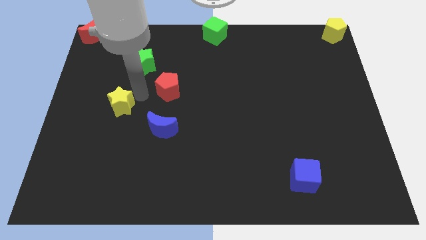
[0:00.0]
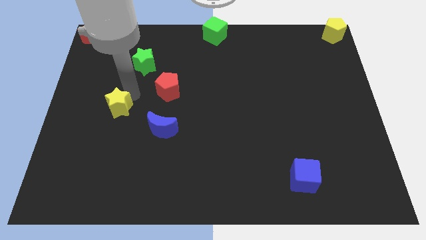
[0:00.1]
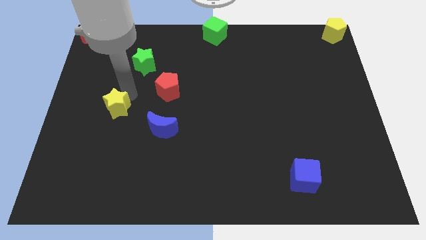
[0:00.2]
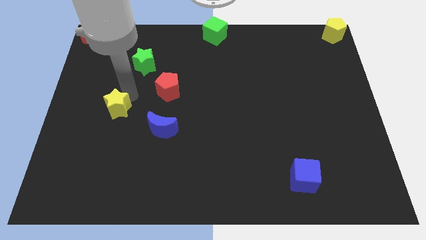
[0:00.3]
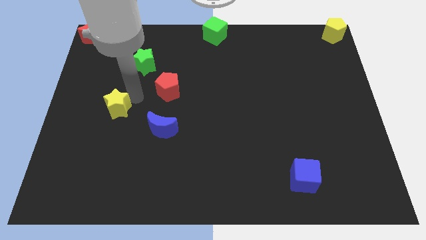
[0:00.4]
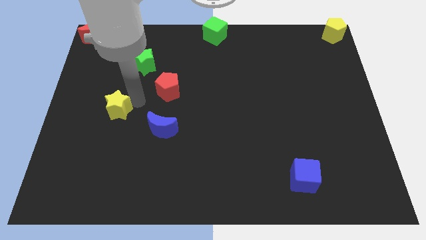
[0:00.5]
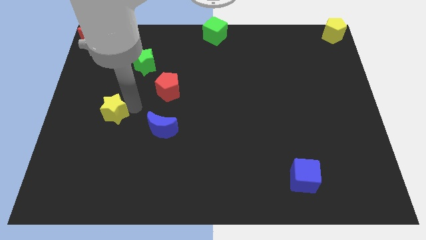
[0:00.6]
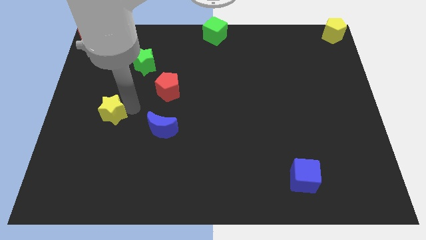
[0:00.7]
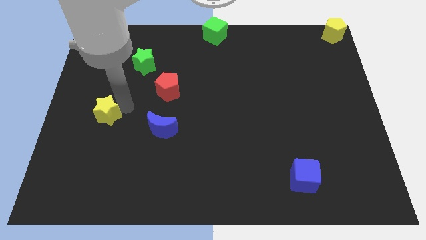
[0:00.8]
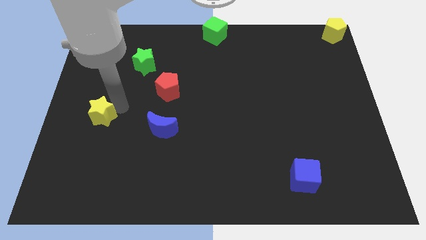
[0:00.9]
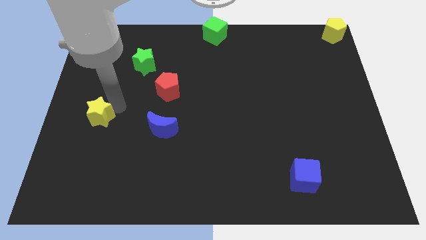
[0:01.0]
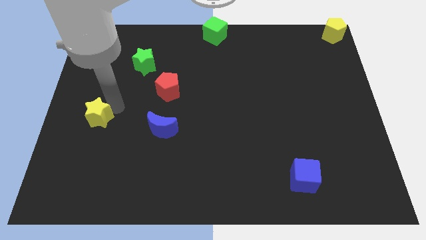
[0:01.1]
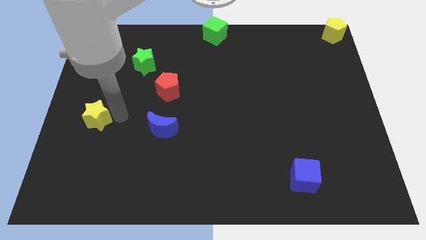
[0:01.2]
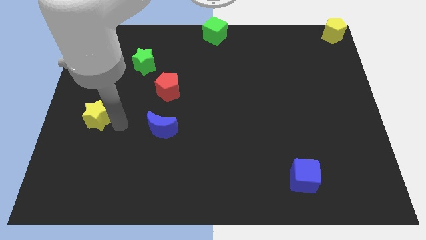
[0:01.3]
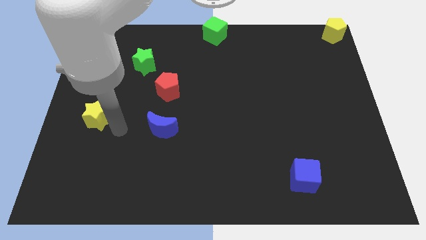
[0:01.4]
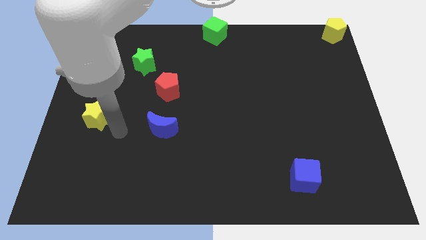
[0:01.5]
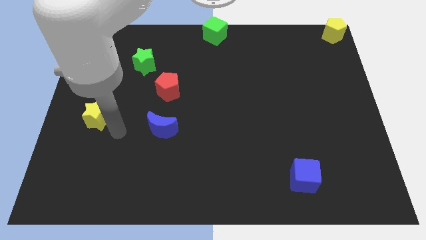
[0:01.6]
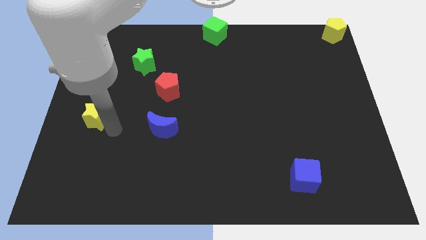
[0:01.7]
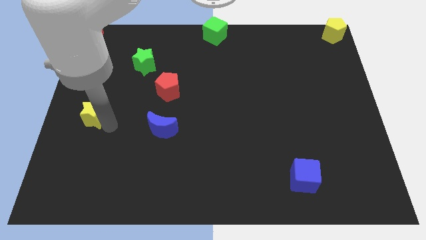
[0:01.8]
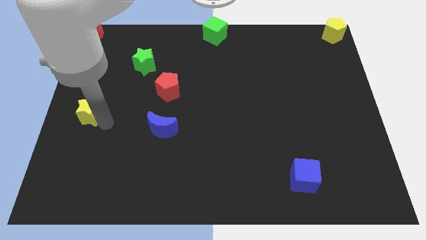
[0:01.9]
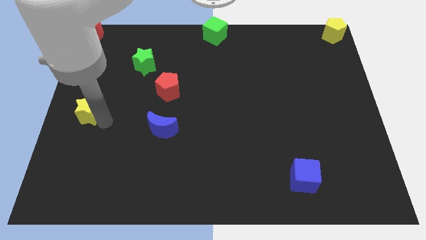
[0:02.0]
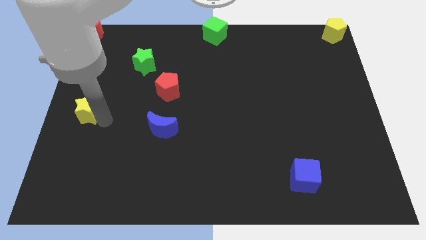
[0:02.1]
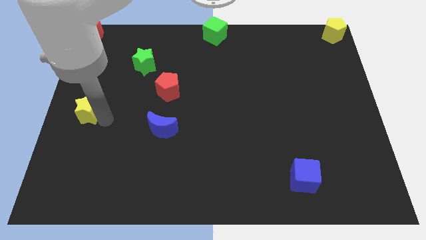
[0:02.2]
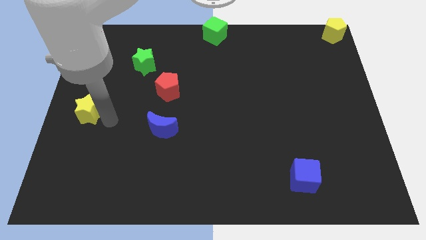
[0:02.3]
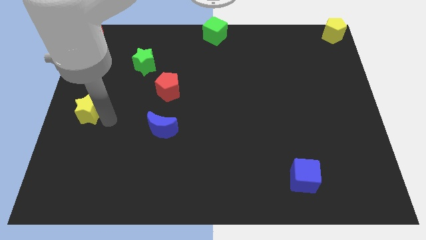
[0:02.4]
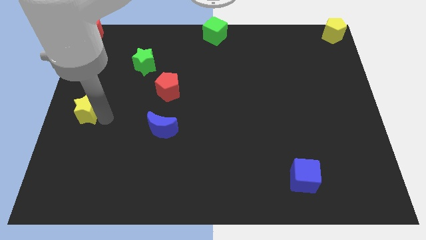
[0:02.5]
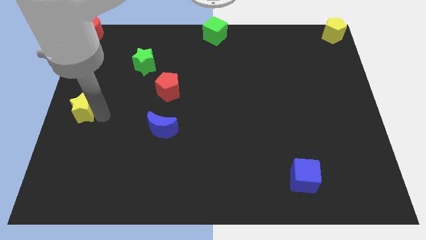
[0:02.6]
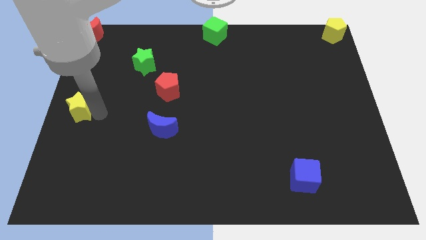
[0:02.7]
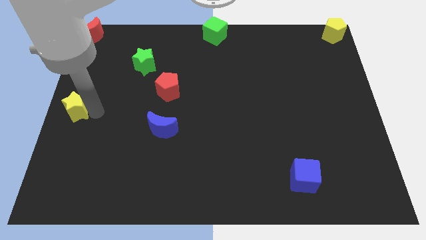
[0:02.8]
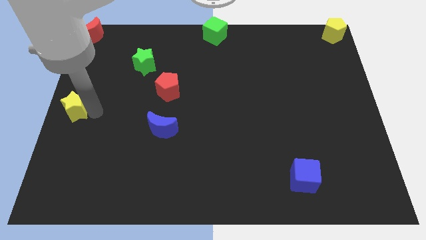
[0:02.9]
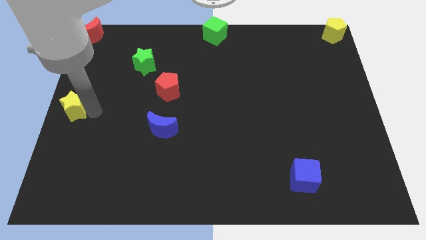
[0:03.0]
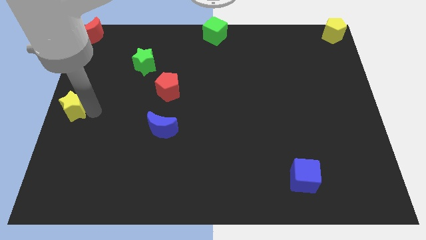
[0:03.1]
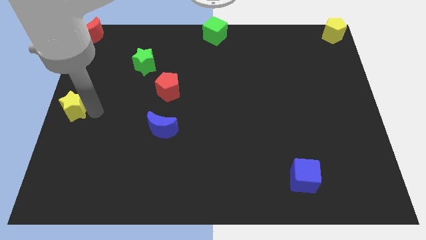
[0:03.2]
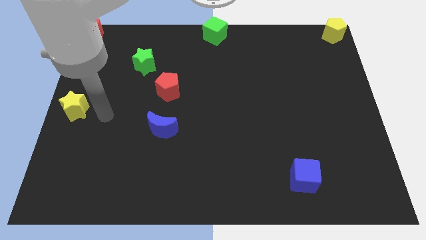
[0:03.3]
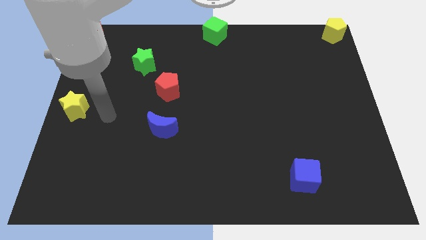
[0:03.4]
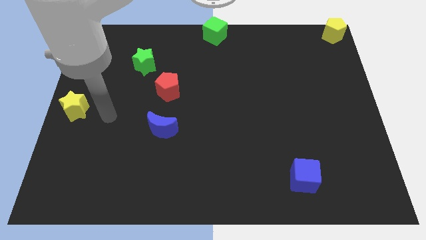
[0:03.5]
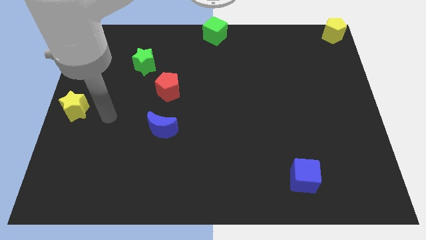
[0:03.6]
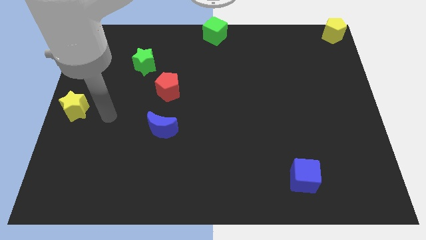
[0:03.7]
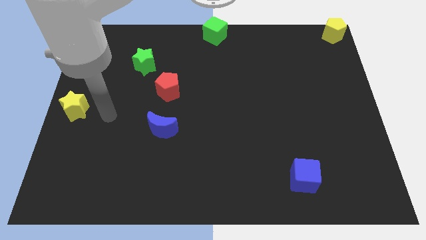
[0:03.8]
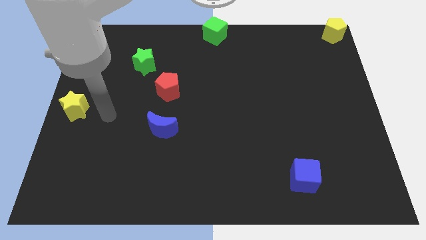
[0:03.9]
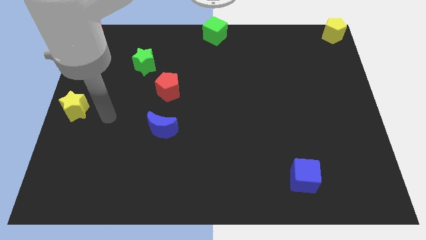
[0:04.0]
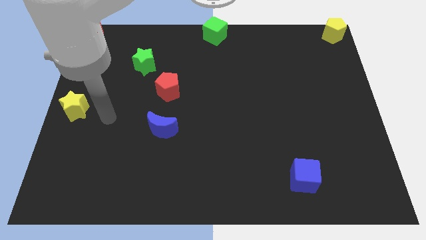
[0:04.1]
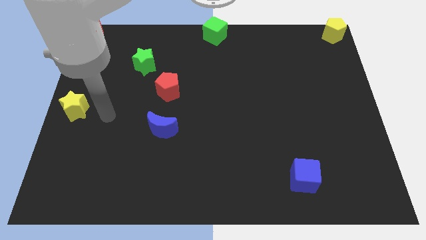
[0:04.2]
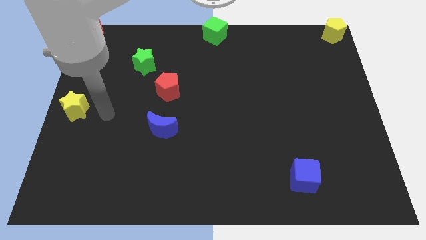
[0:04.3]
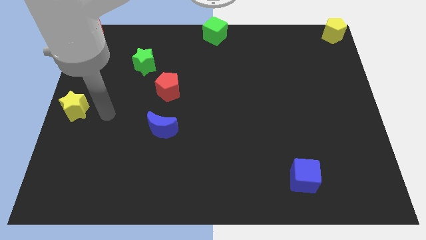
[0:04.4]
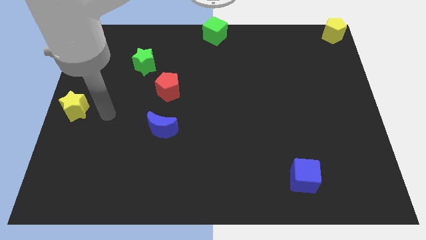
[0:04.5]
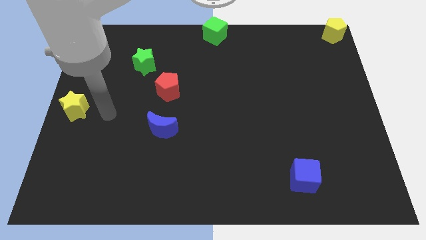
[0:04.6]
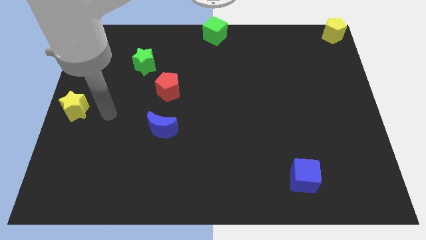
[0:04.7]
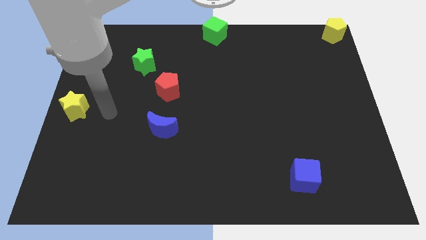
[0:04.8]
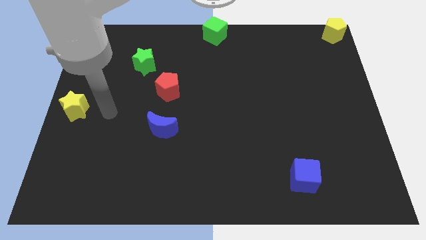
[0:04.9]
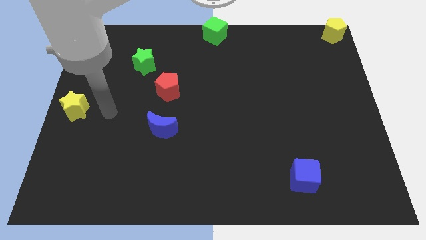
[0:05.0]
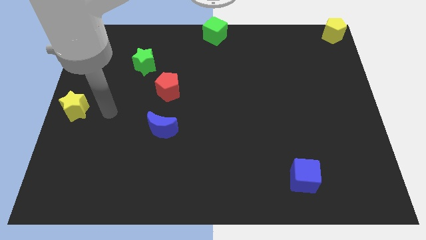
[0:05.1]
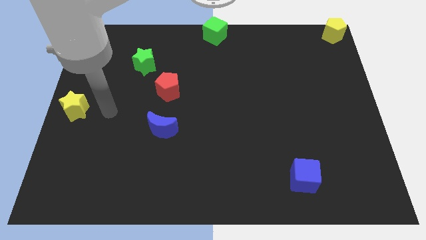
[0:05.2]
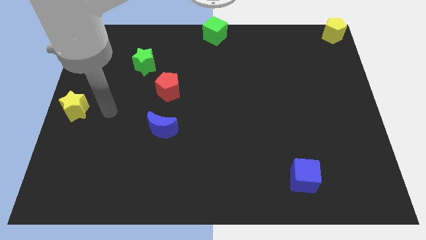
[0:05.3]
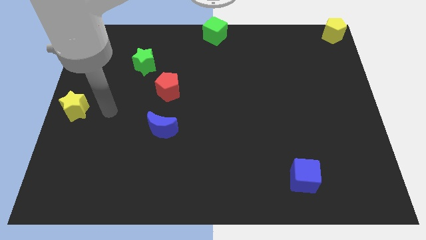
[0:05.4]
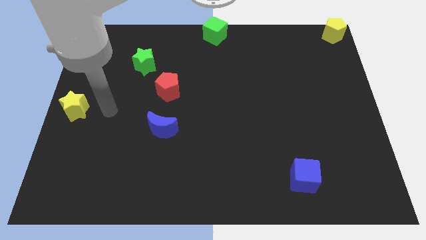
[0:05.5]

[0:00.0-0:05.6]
place the yellow star vertically below the red crescent

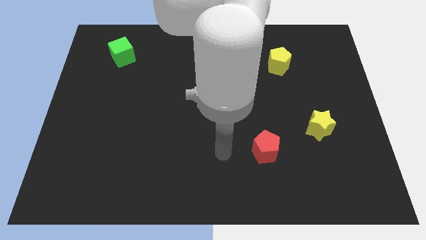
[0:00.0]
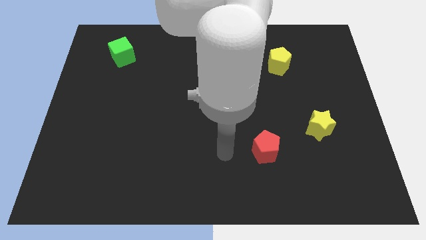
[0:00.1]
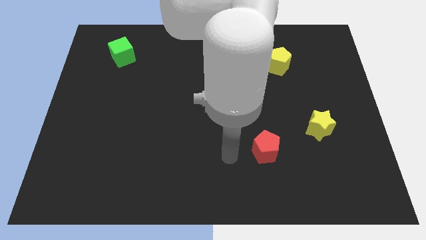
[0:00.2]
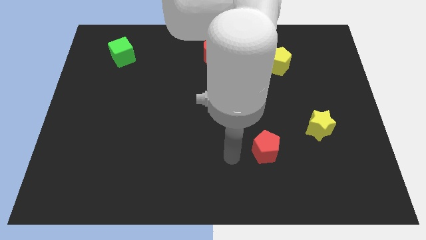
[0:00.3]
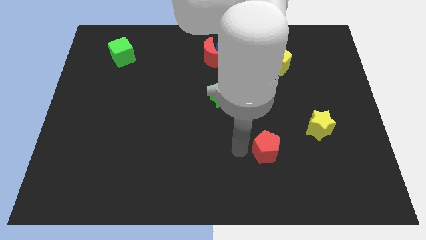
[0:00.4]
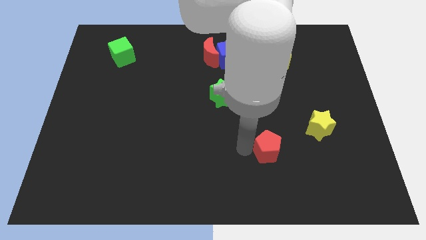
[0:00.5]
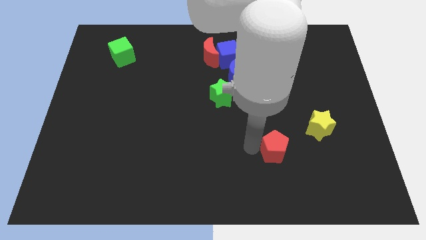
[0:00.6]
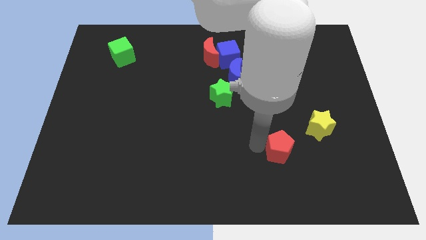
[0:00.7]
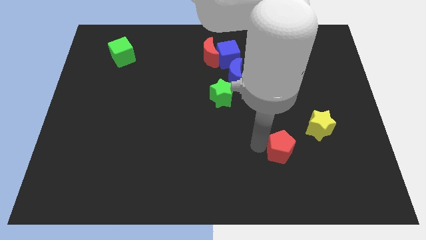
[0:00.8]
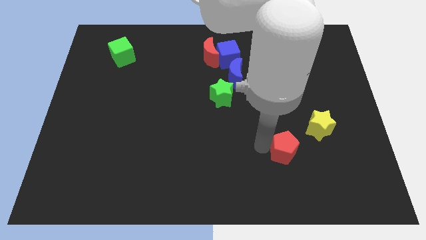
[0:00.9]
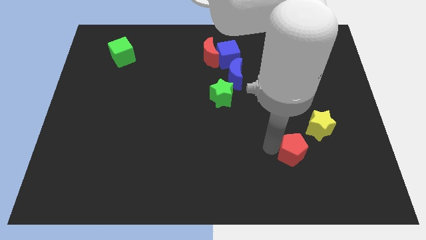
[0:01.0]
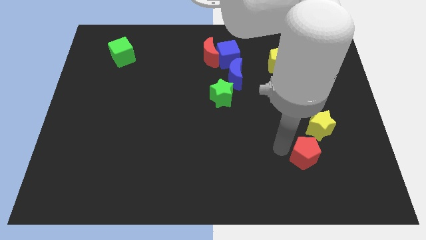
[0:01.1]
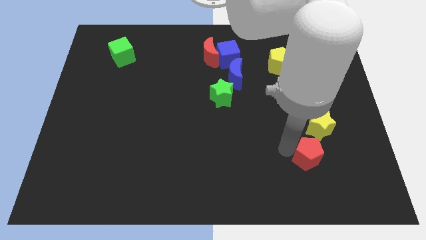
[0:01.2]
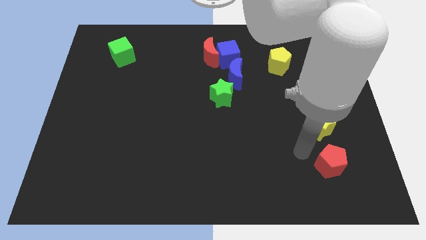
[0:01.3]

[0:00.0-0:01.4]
put the red pentagon below the yellow star

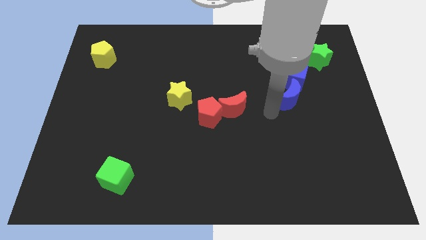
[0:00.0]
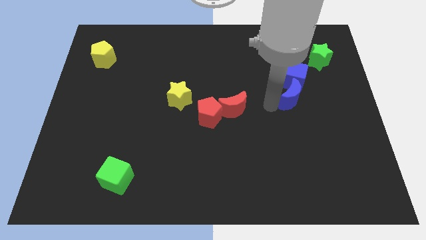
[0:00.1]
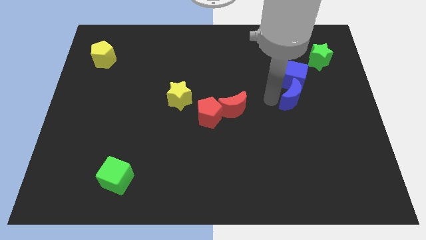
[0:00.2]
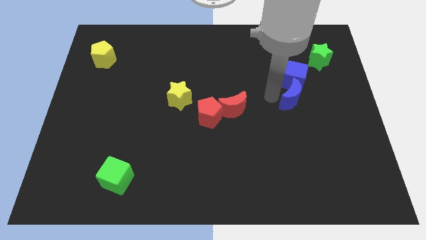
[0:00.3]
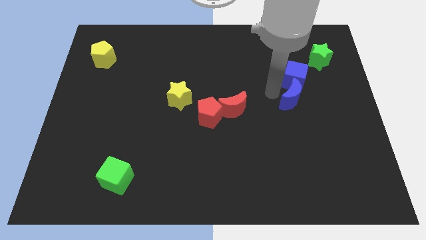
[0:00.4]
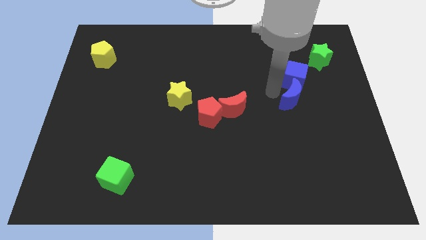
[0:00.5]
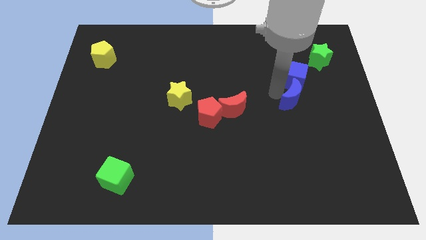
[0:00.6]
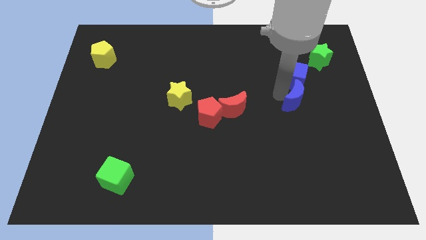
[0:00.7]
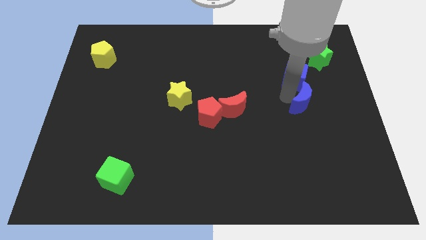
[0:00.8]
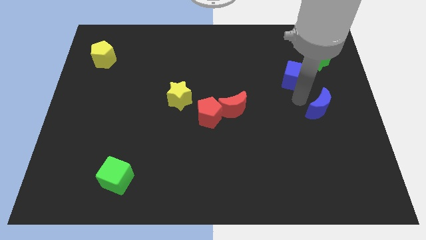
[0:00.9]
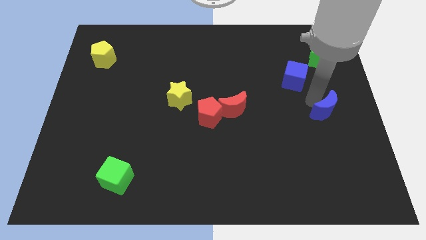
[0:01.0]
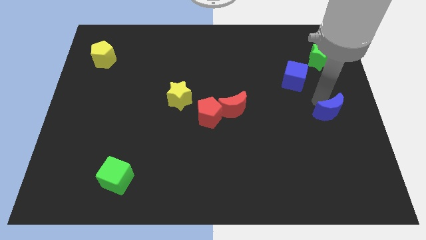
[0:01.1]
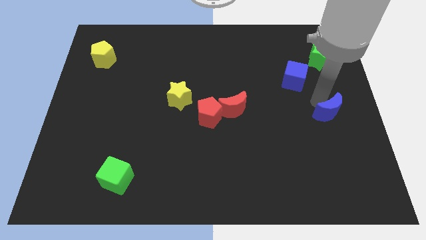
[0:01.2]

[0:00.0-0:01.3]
place the blue moon diagonally to the right of the blue cube

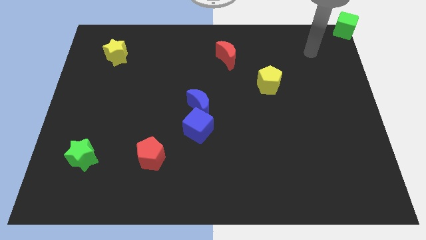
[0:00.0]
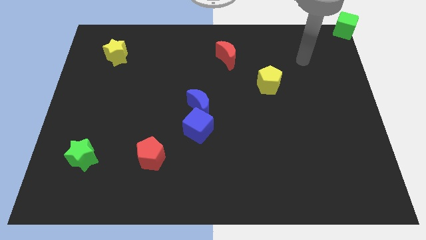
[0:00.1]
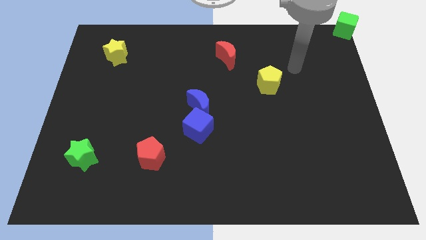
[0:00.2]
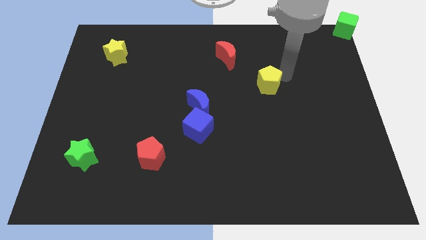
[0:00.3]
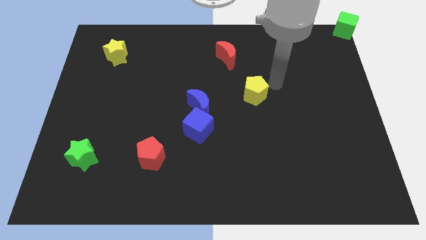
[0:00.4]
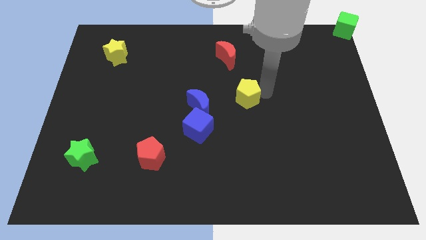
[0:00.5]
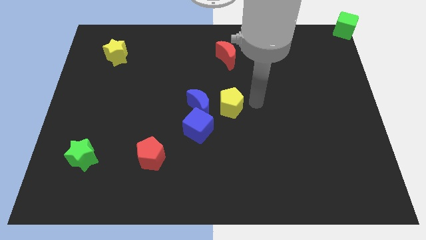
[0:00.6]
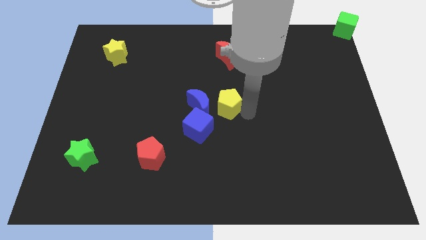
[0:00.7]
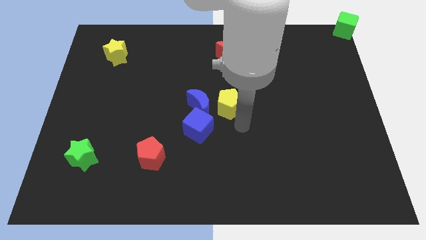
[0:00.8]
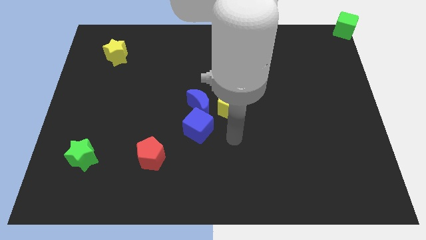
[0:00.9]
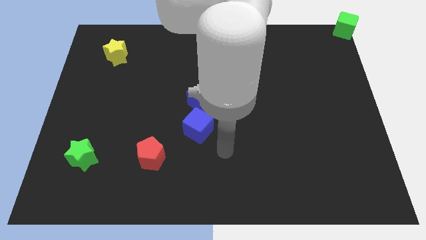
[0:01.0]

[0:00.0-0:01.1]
move the yellow pentagon towards the blue blocks
